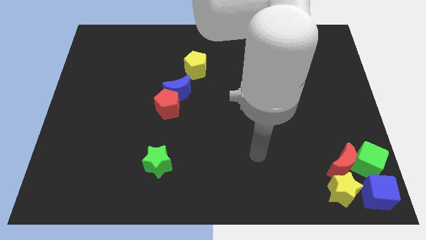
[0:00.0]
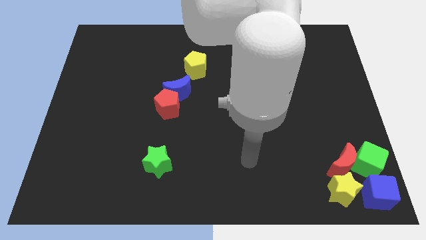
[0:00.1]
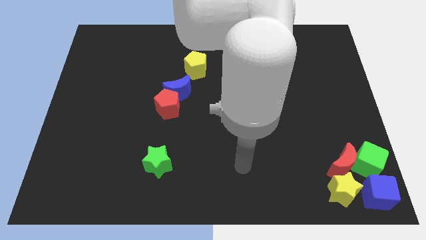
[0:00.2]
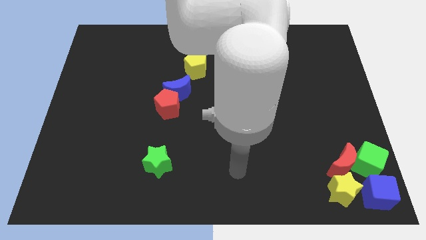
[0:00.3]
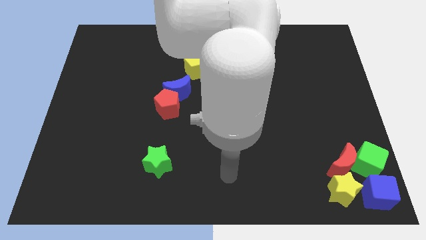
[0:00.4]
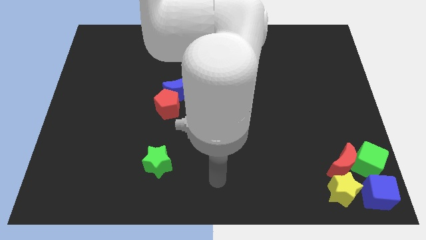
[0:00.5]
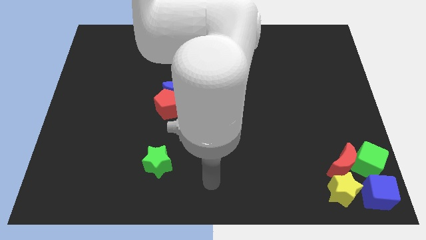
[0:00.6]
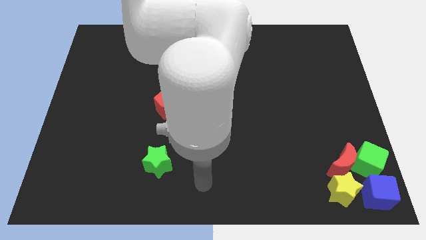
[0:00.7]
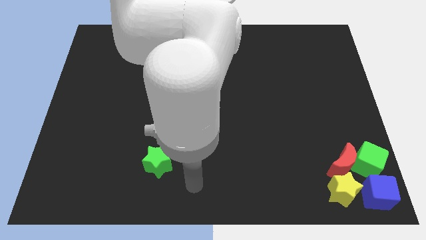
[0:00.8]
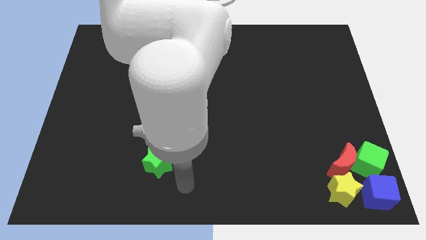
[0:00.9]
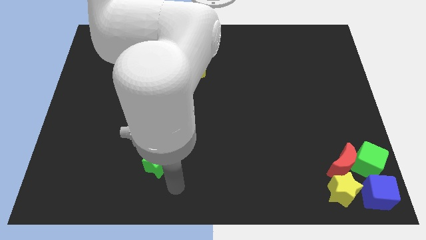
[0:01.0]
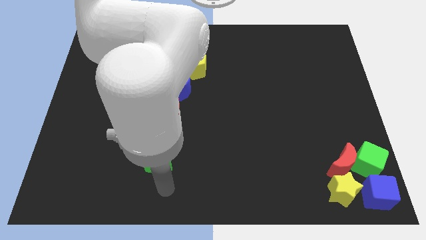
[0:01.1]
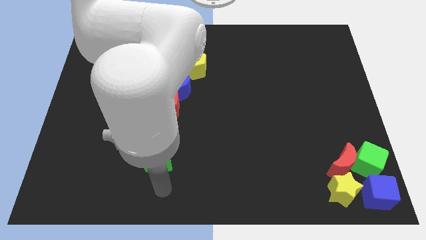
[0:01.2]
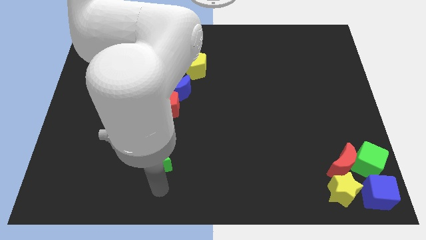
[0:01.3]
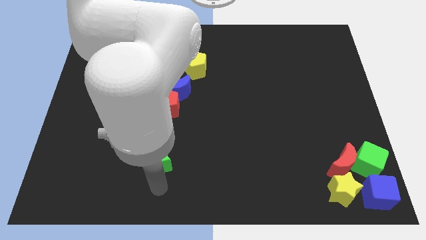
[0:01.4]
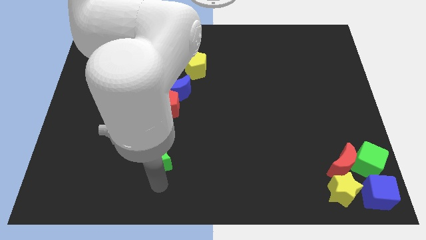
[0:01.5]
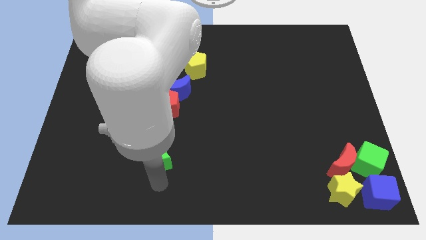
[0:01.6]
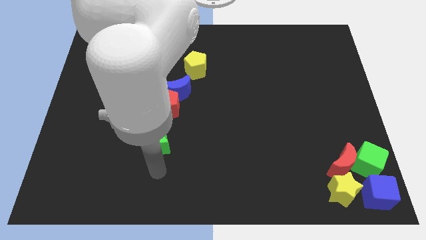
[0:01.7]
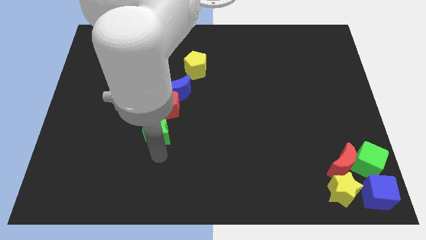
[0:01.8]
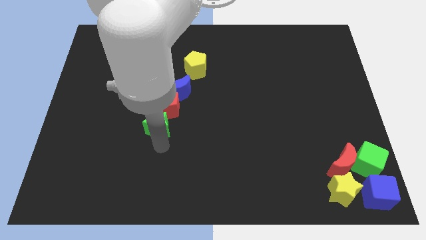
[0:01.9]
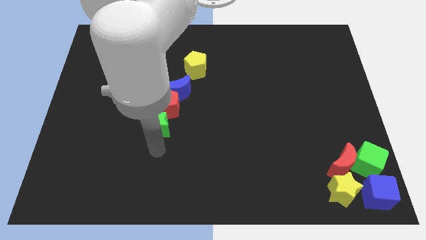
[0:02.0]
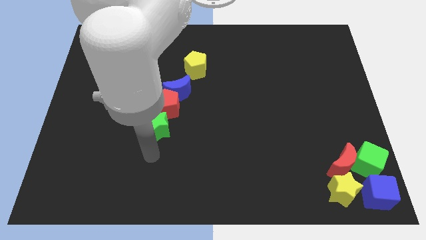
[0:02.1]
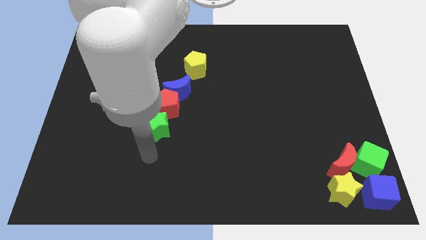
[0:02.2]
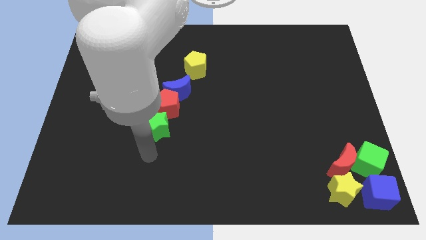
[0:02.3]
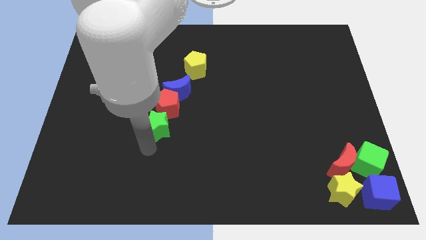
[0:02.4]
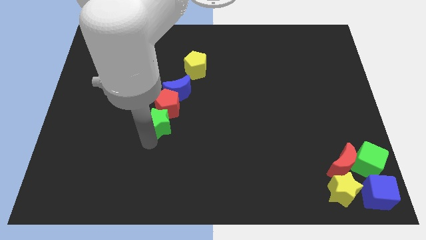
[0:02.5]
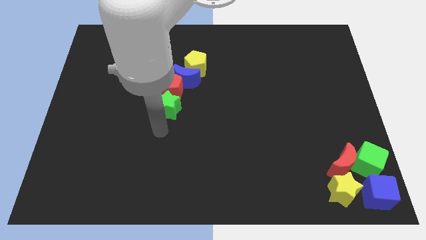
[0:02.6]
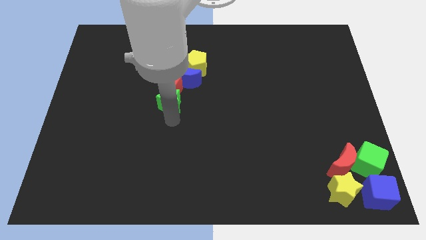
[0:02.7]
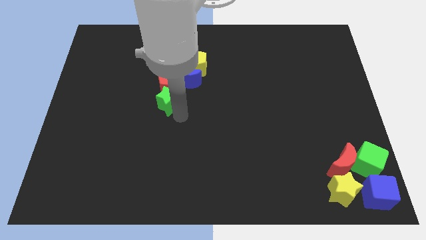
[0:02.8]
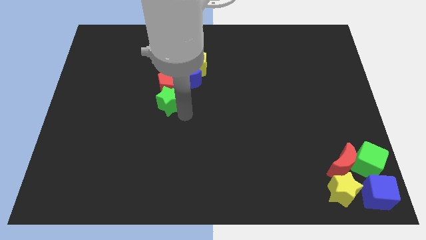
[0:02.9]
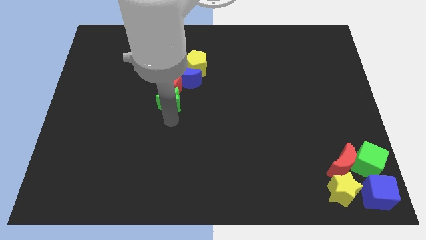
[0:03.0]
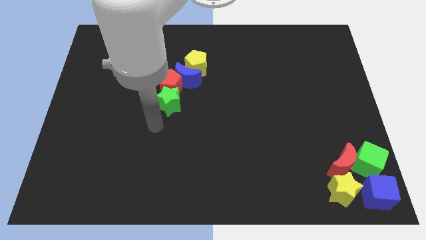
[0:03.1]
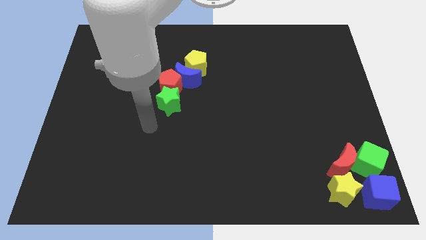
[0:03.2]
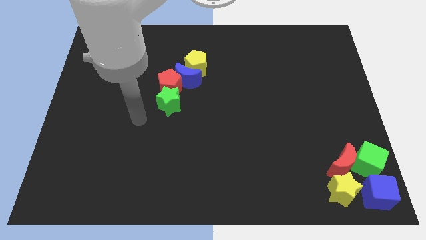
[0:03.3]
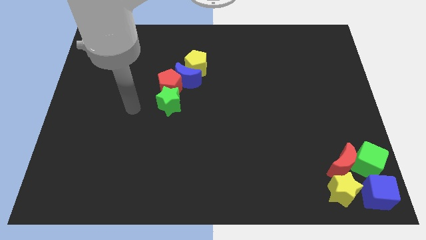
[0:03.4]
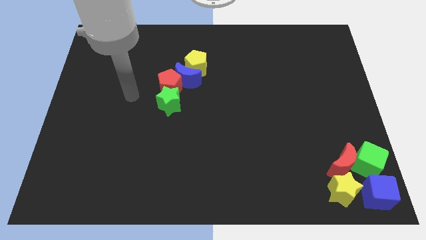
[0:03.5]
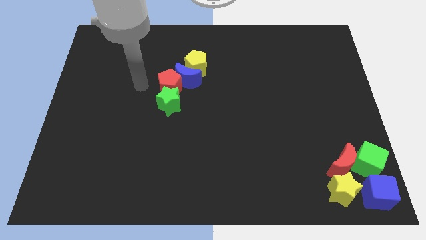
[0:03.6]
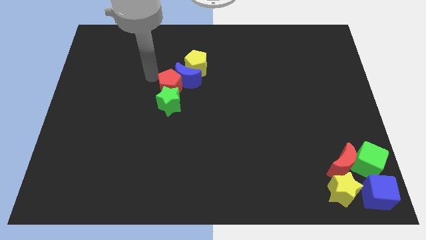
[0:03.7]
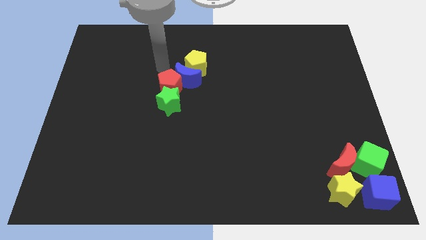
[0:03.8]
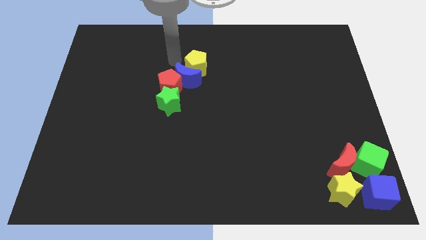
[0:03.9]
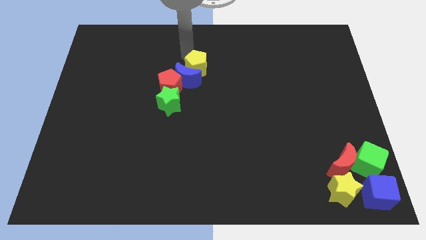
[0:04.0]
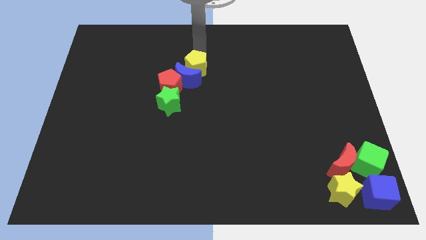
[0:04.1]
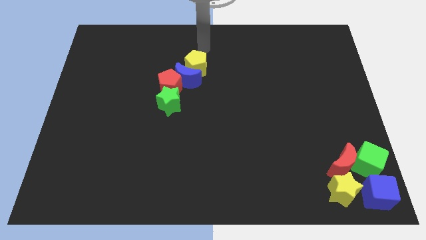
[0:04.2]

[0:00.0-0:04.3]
move the green star towards top

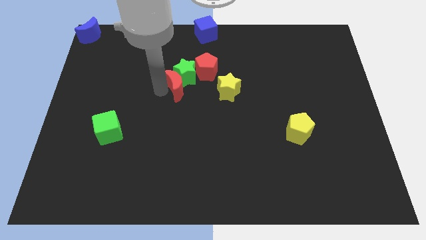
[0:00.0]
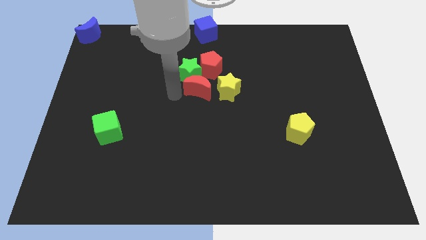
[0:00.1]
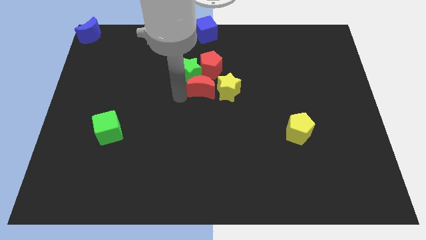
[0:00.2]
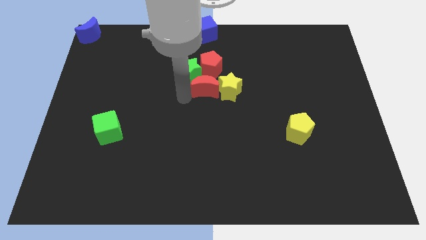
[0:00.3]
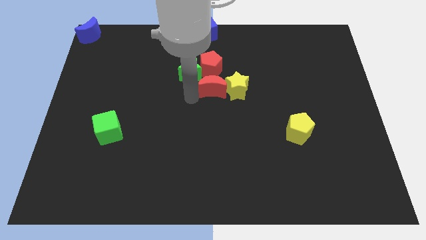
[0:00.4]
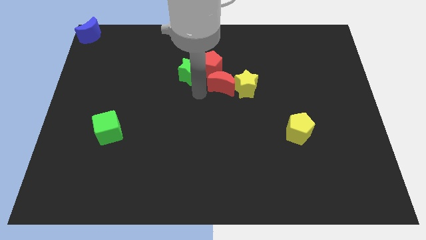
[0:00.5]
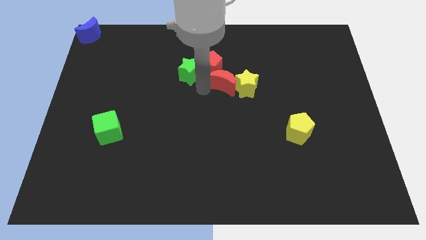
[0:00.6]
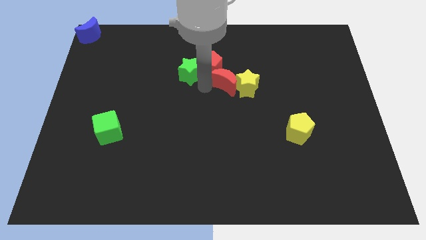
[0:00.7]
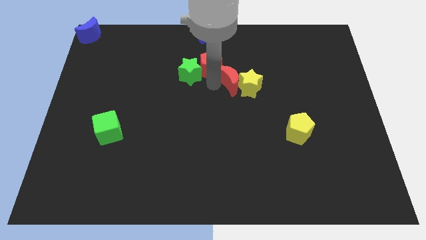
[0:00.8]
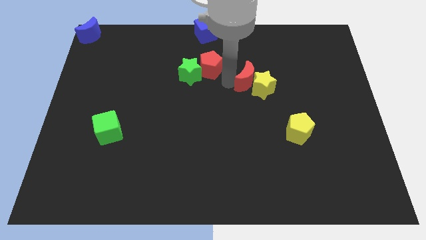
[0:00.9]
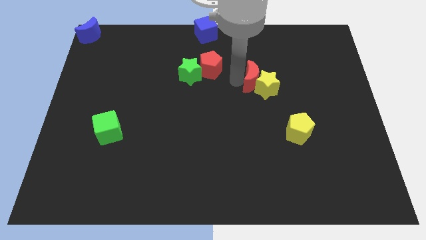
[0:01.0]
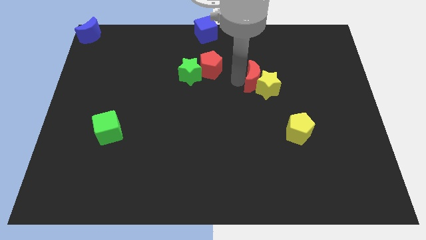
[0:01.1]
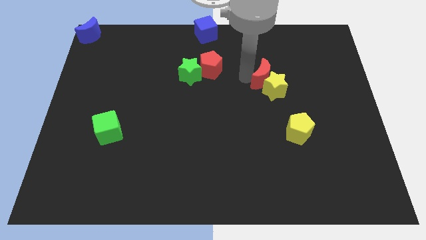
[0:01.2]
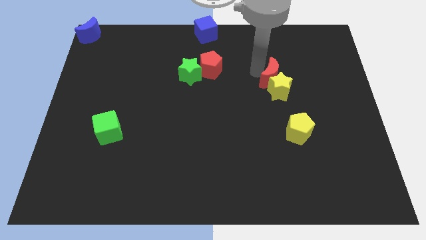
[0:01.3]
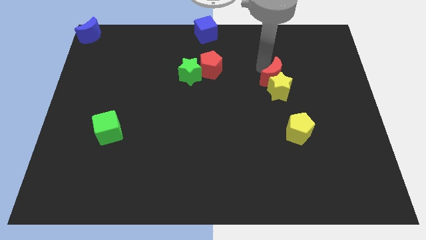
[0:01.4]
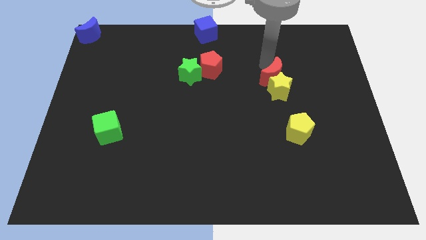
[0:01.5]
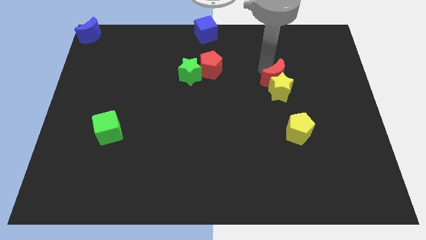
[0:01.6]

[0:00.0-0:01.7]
push the red moon into the yellow star

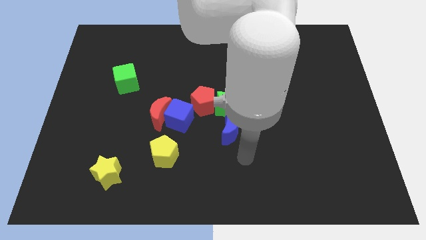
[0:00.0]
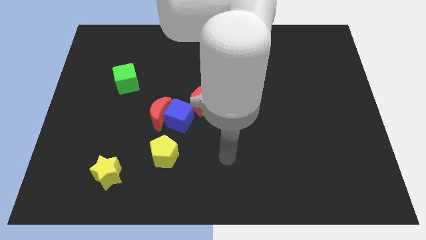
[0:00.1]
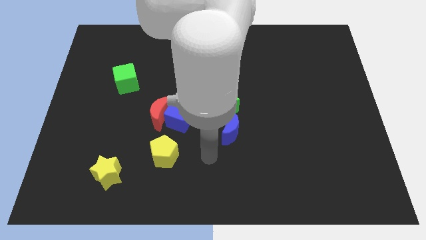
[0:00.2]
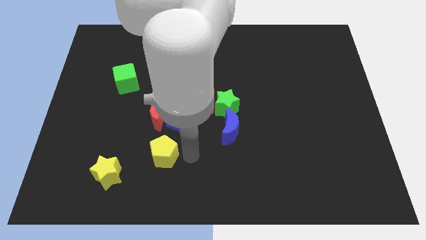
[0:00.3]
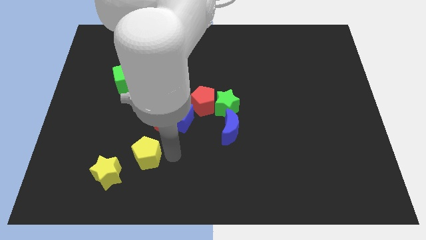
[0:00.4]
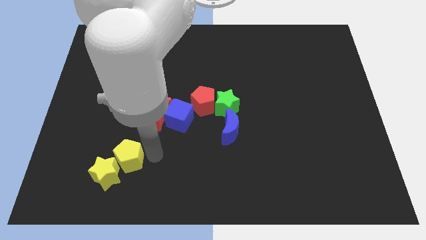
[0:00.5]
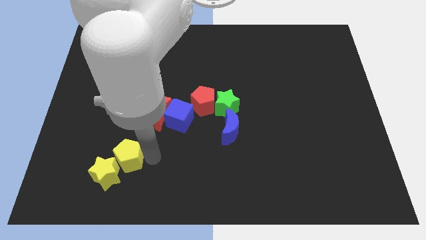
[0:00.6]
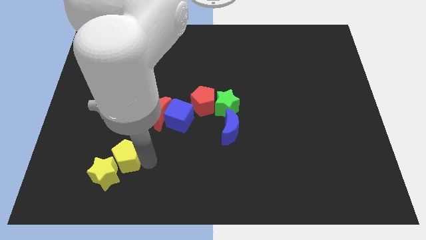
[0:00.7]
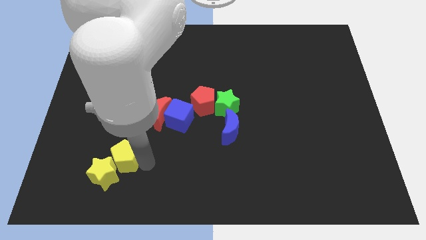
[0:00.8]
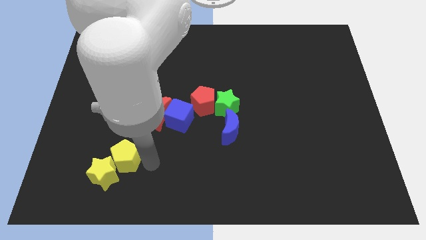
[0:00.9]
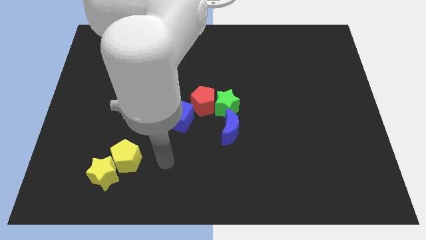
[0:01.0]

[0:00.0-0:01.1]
push the yellow pentagon into the yellow star

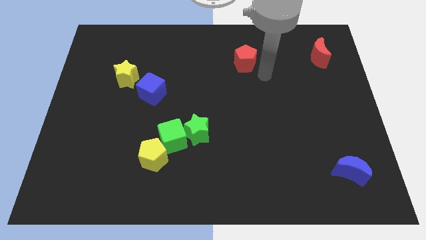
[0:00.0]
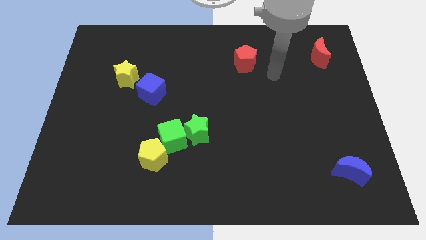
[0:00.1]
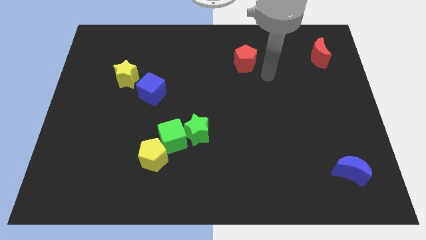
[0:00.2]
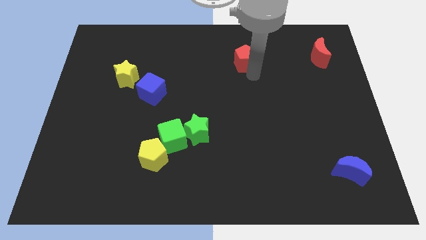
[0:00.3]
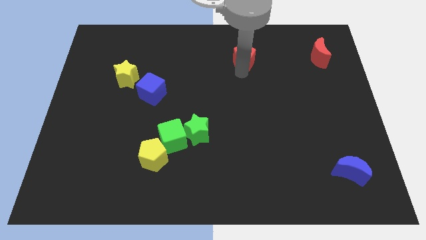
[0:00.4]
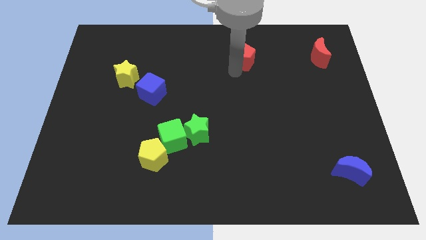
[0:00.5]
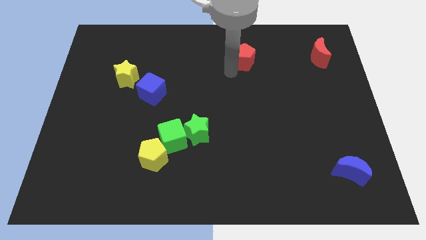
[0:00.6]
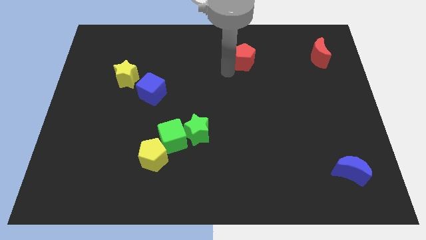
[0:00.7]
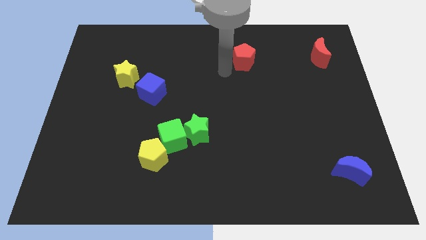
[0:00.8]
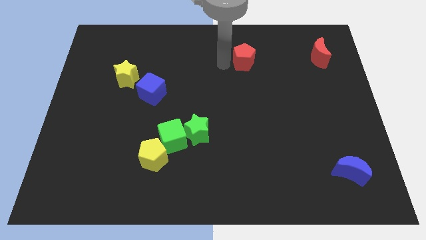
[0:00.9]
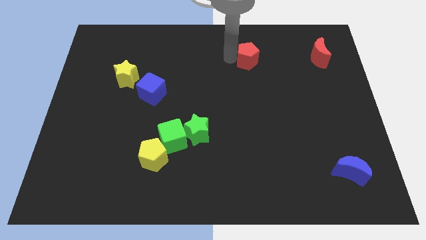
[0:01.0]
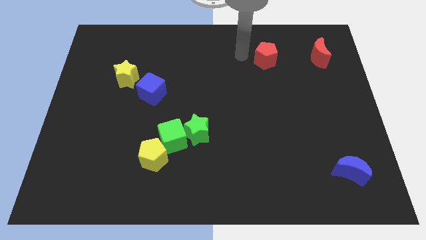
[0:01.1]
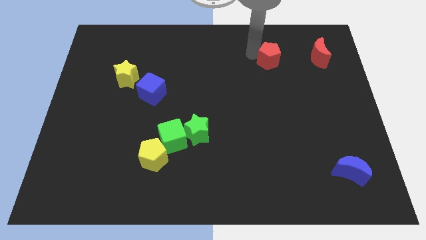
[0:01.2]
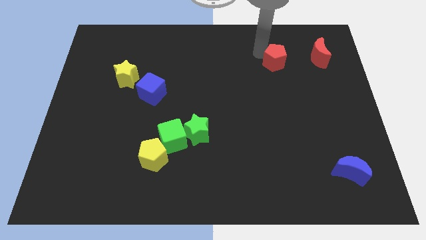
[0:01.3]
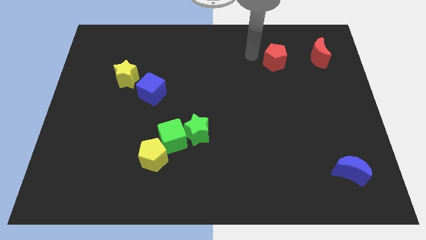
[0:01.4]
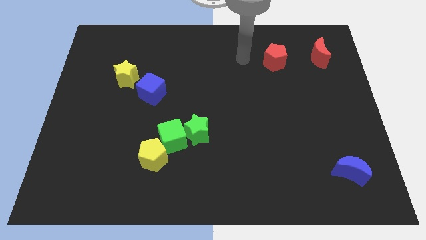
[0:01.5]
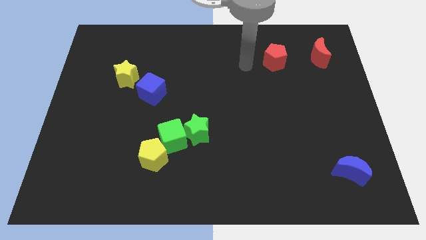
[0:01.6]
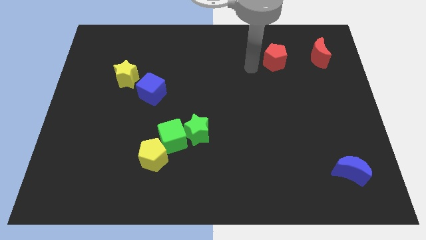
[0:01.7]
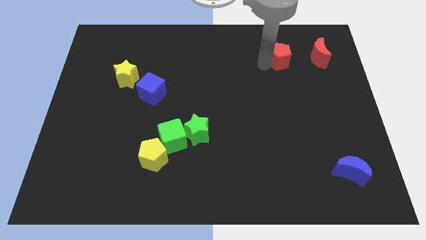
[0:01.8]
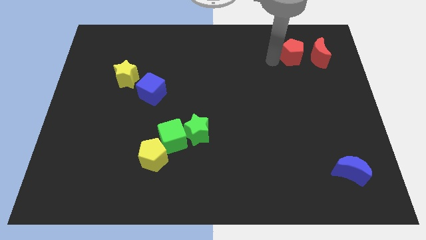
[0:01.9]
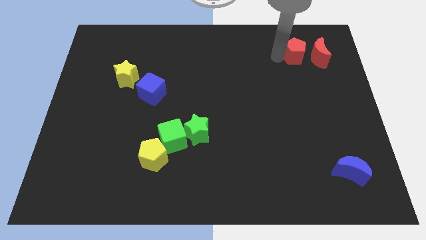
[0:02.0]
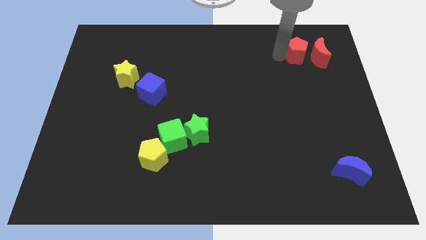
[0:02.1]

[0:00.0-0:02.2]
move the red pentagon left to the red crescent
